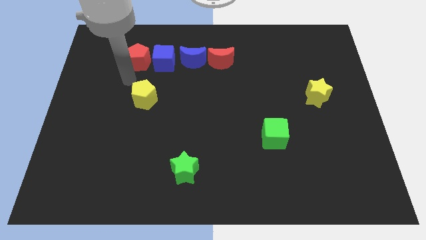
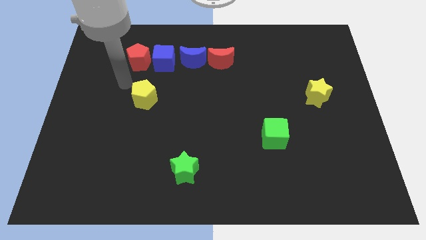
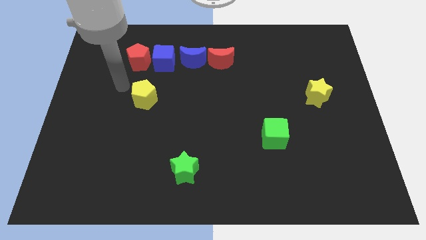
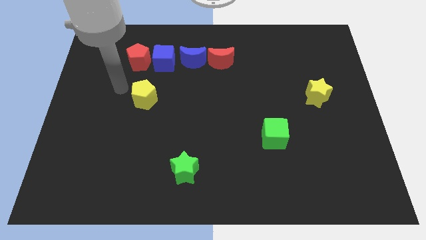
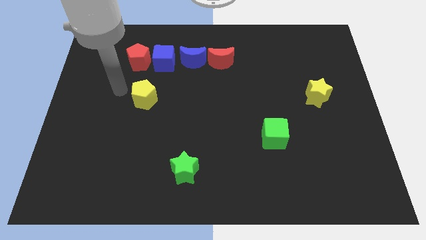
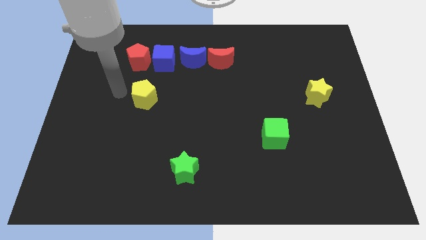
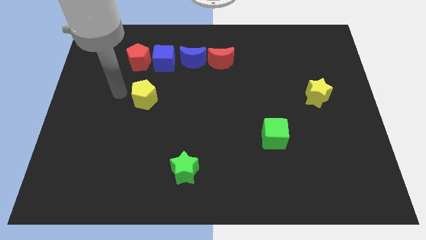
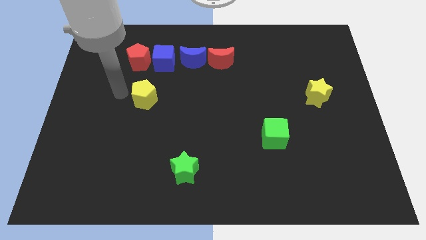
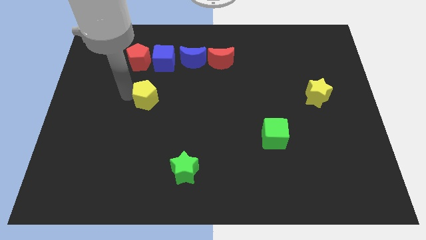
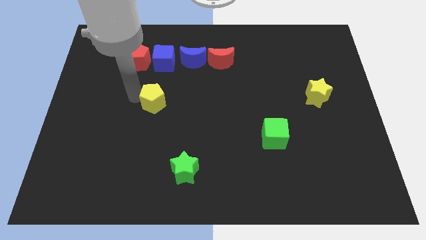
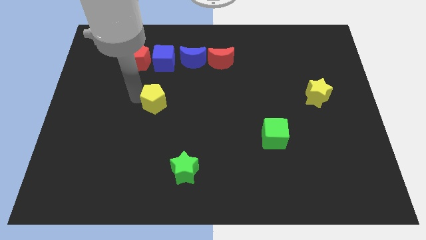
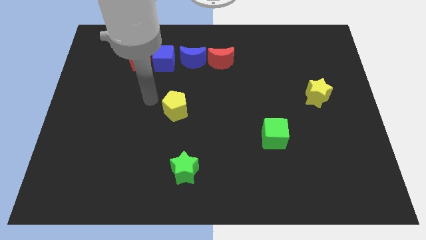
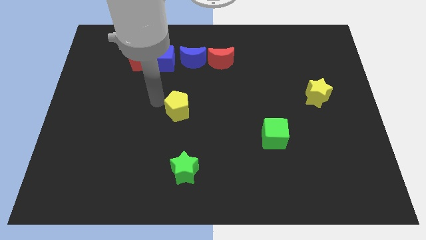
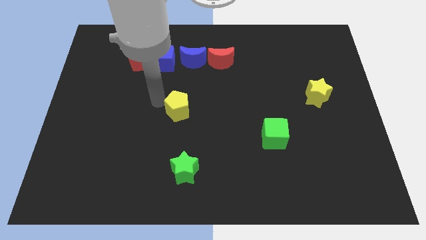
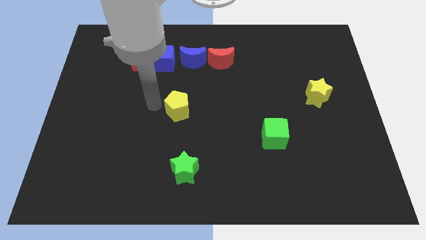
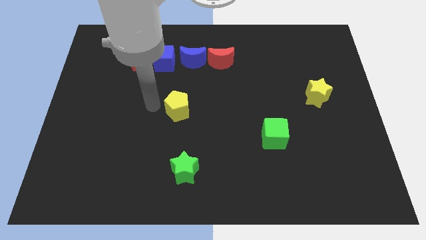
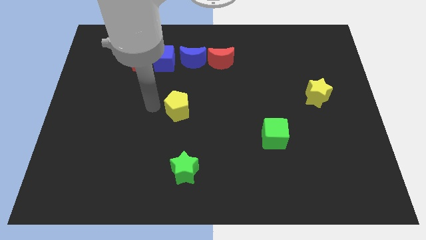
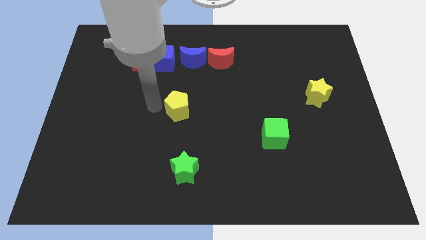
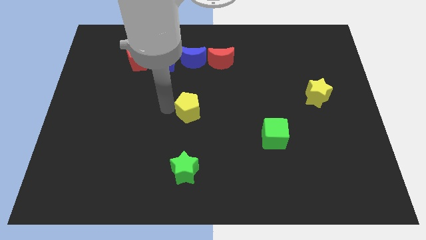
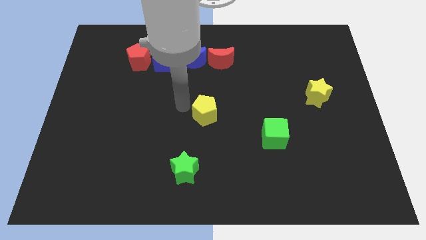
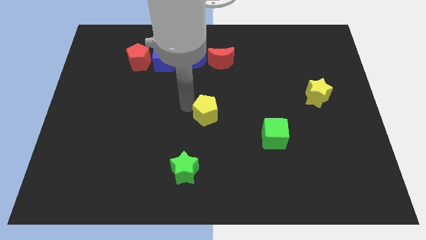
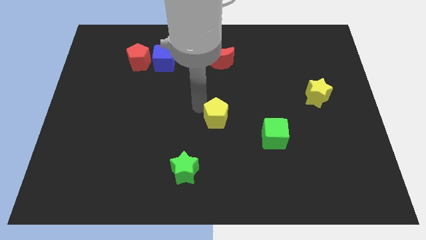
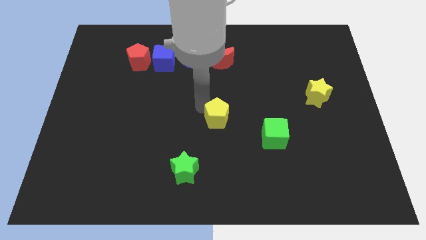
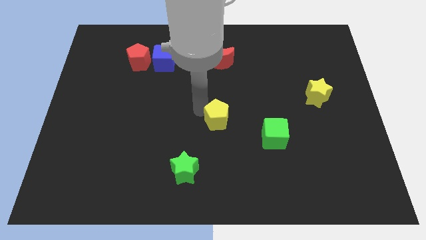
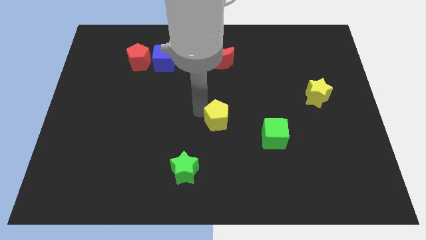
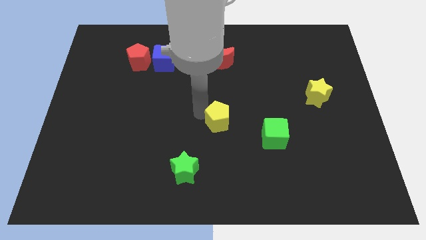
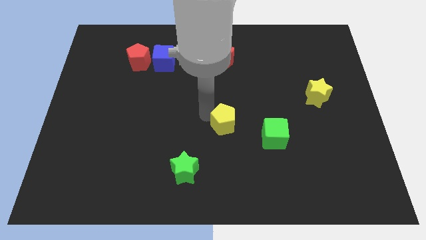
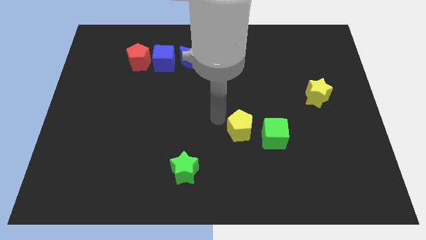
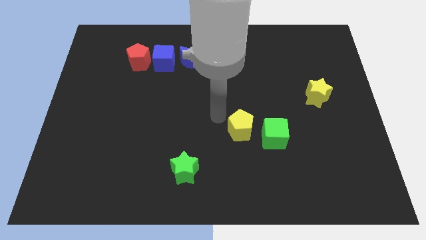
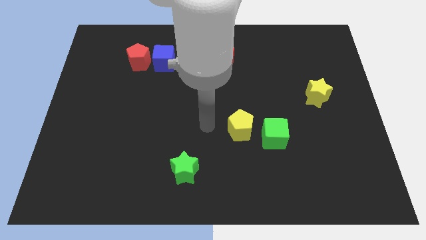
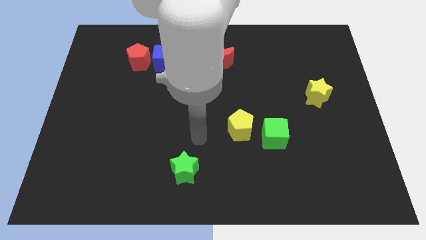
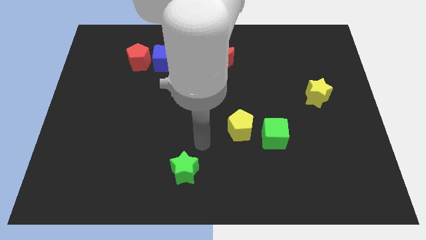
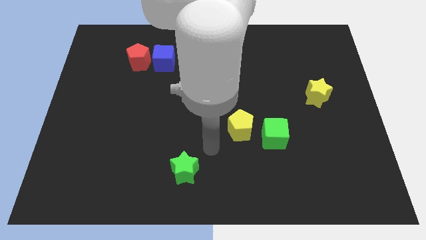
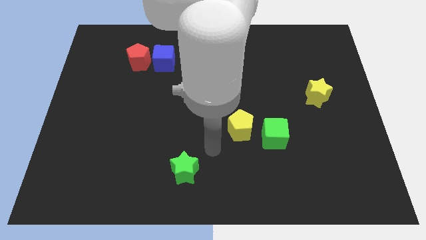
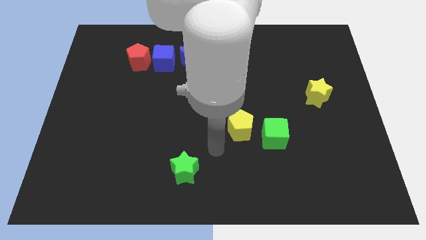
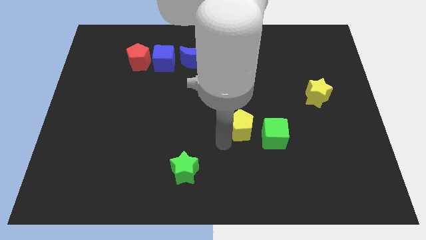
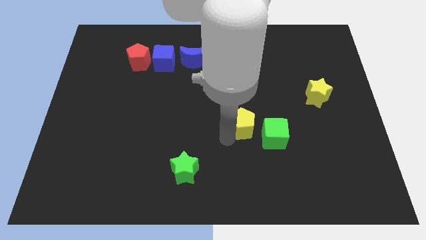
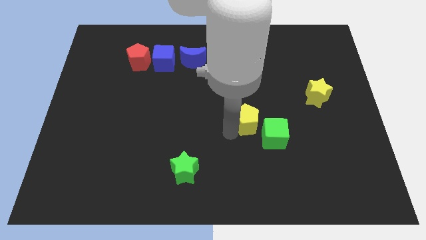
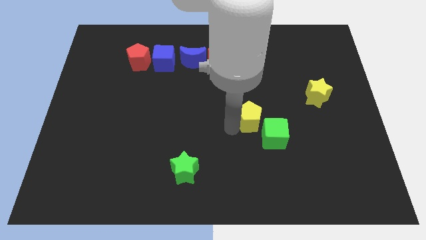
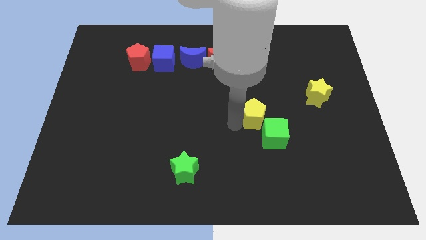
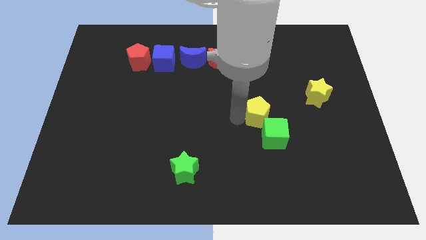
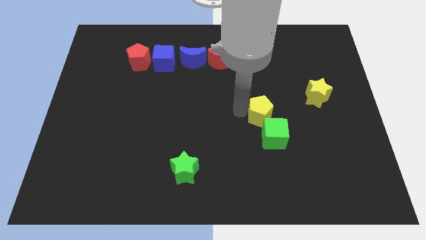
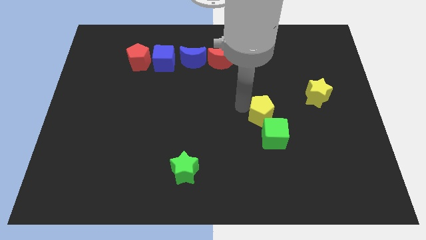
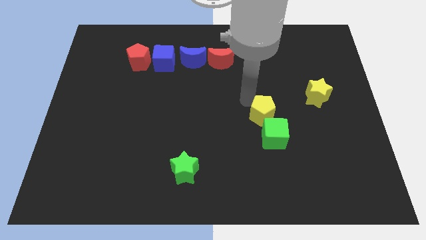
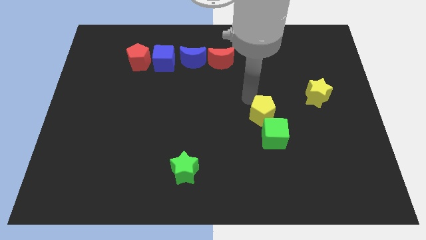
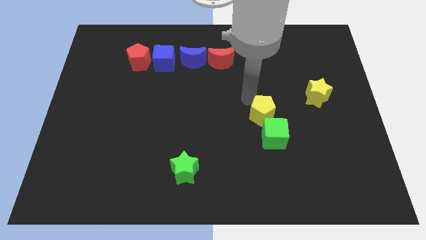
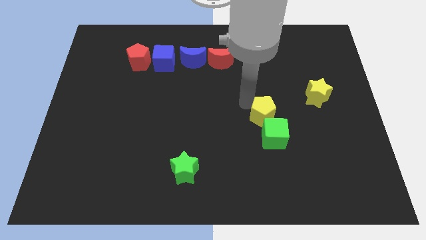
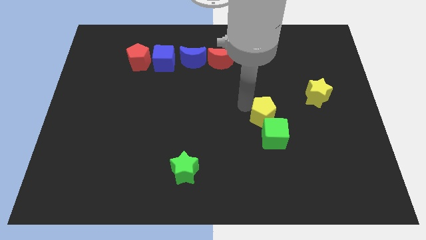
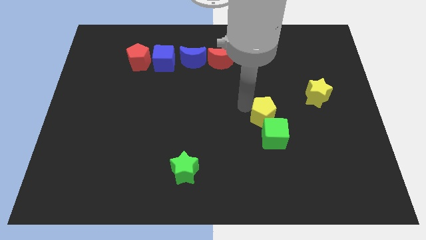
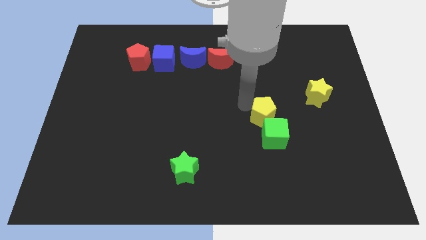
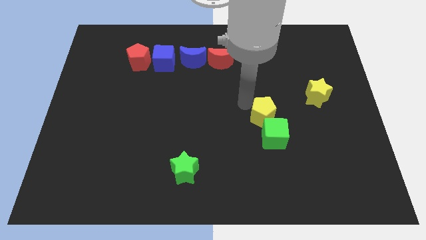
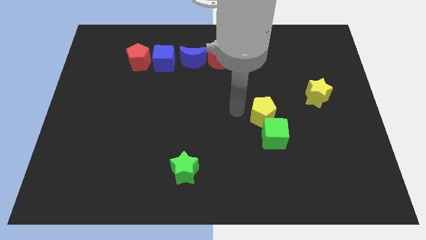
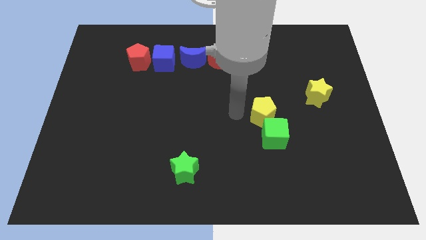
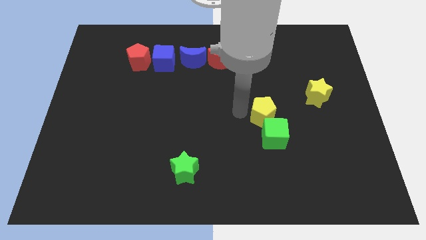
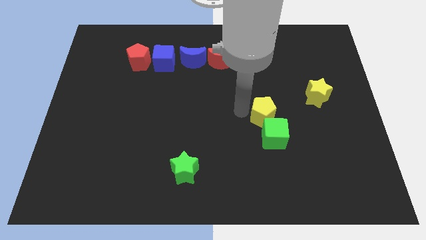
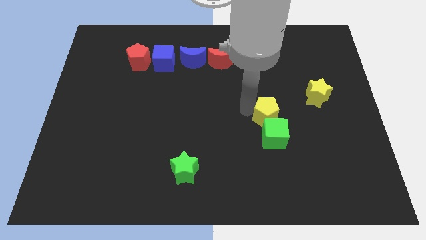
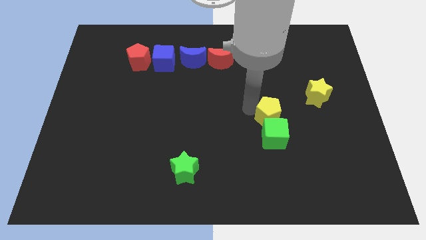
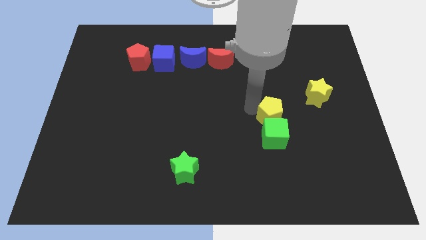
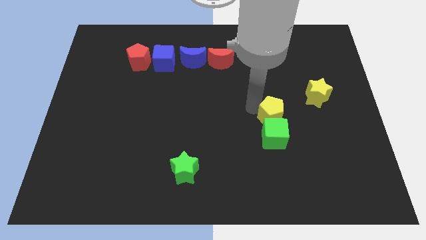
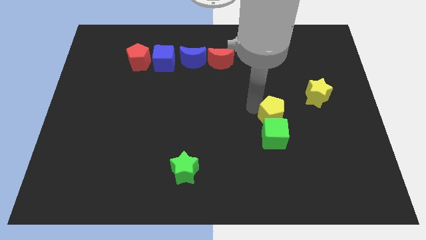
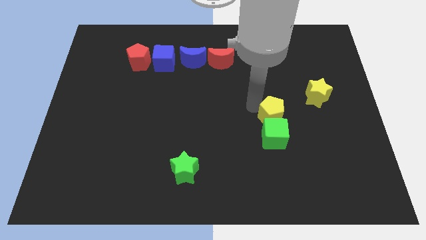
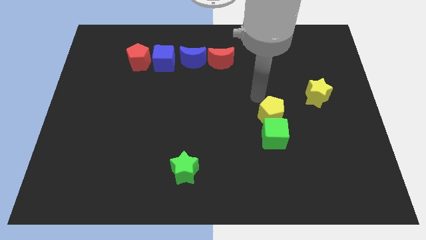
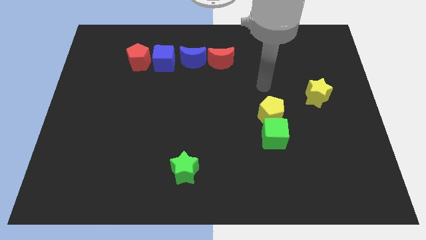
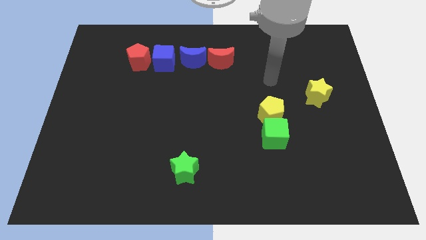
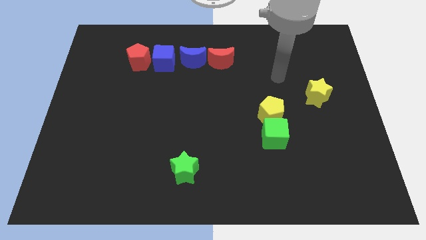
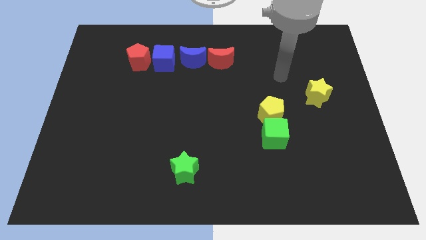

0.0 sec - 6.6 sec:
move the yellow pentagon to the top of the green cube

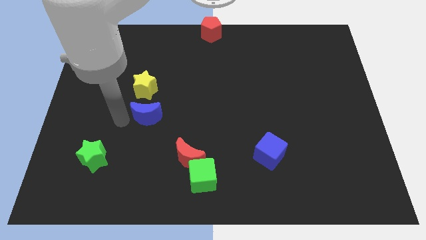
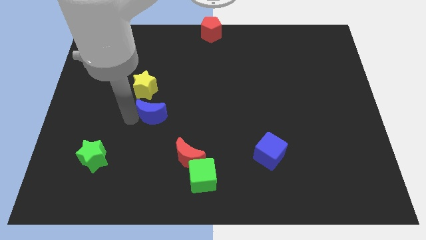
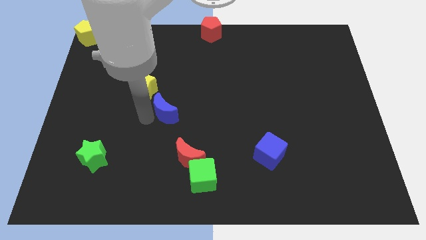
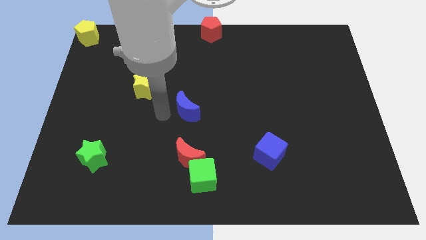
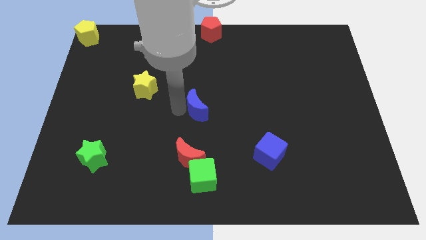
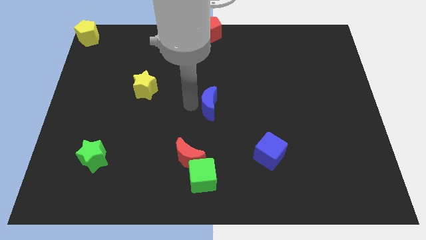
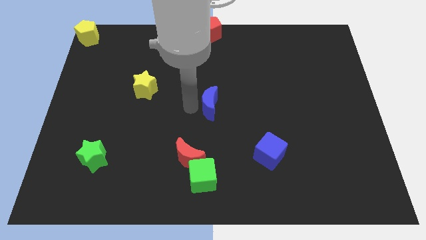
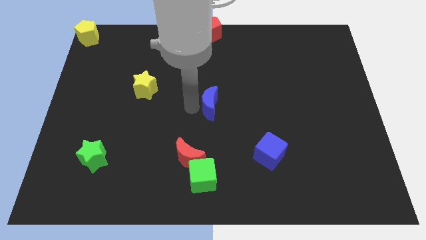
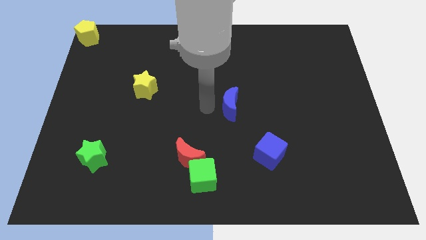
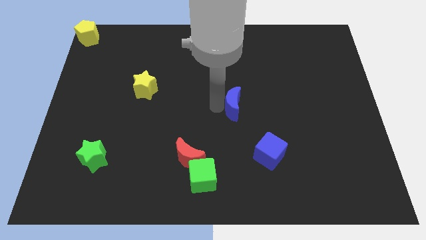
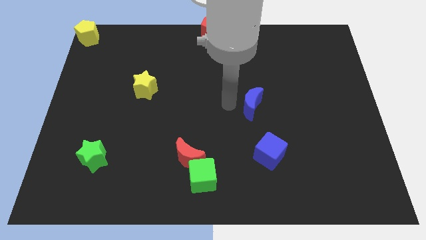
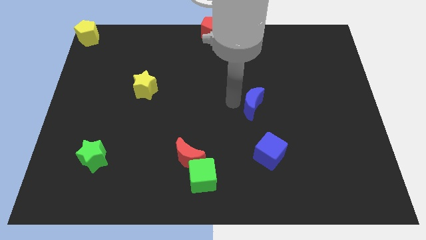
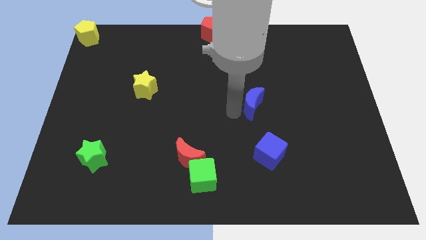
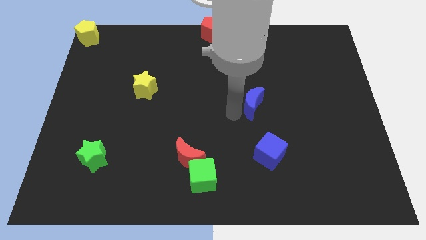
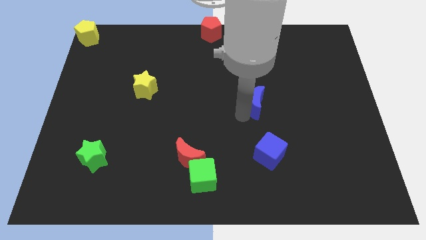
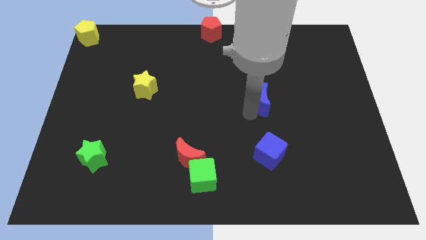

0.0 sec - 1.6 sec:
move the blue crescent to the top of the blue cube

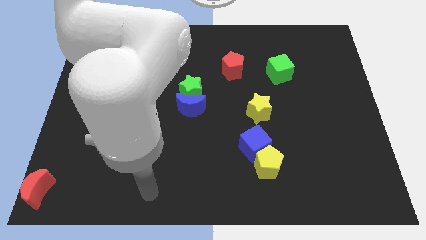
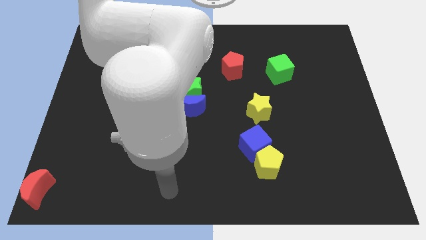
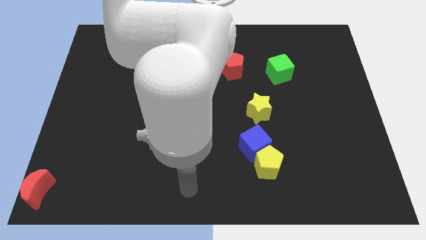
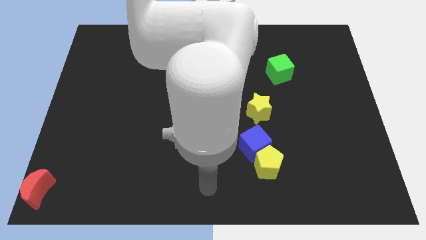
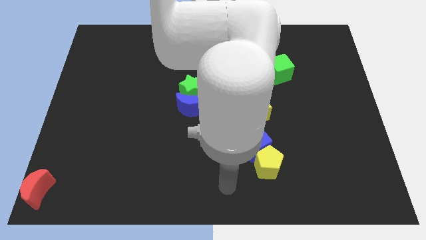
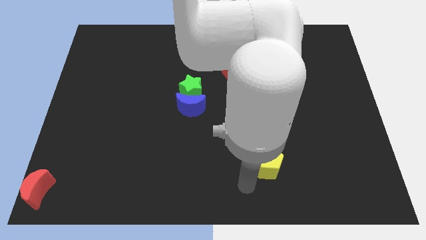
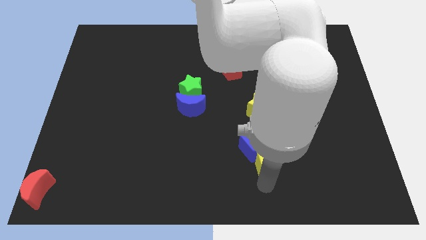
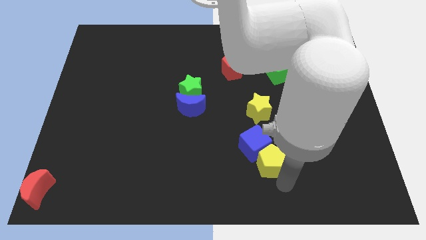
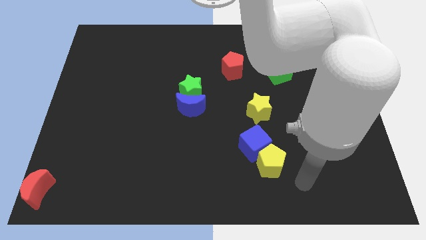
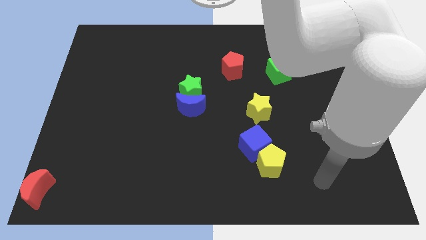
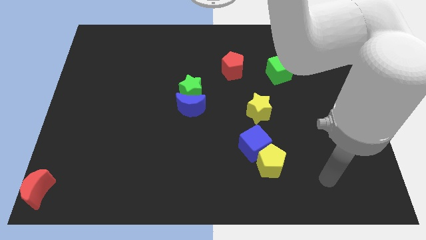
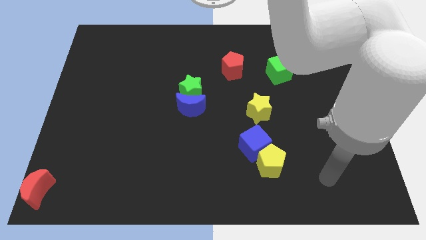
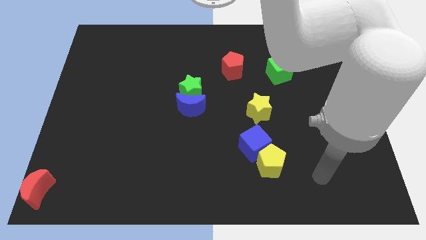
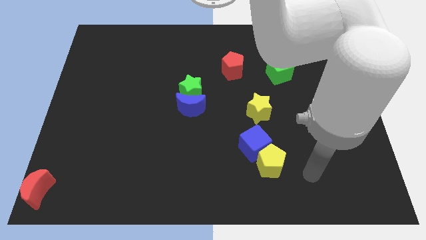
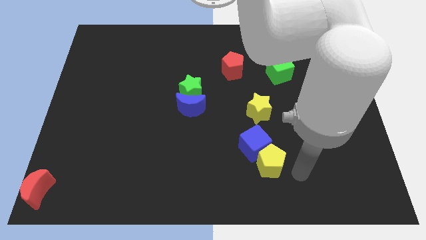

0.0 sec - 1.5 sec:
move the arm towards the yellow pentagon
